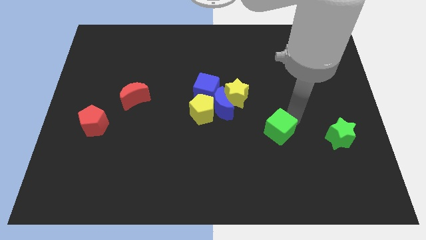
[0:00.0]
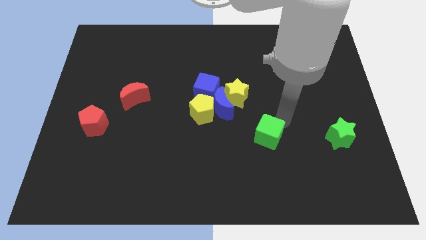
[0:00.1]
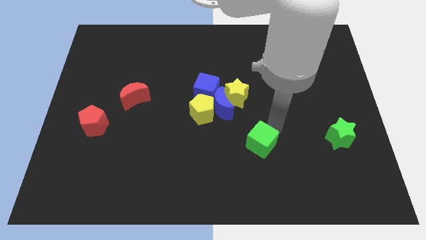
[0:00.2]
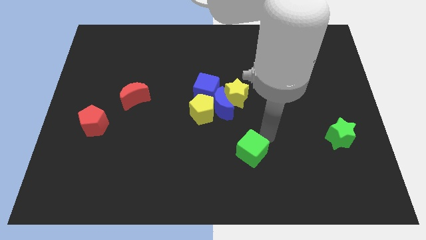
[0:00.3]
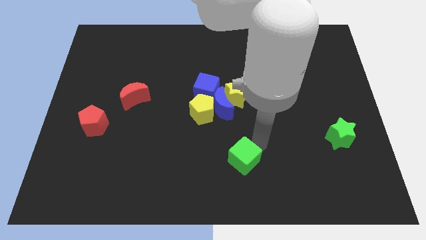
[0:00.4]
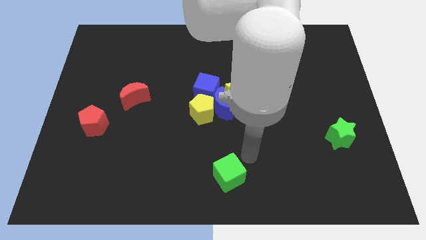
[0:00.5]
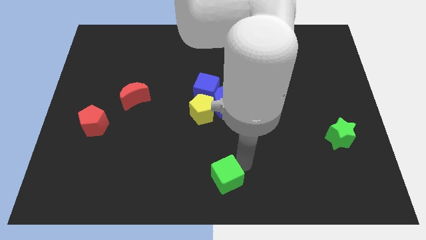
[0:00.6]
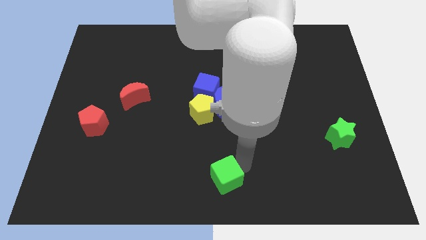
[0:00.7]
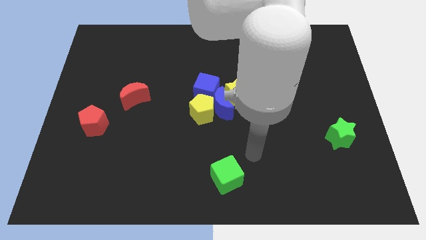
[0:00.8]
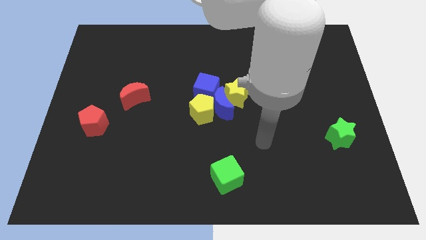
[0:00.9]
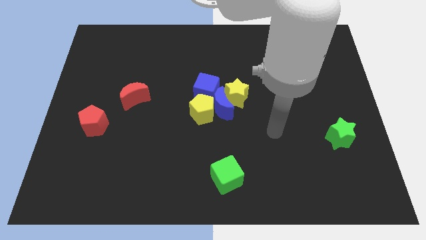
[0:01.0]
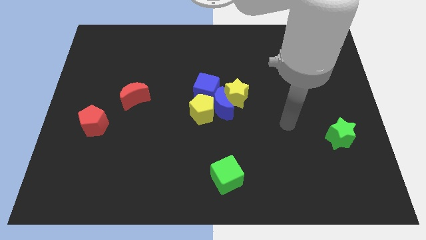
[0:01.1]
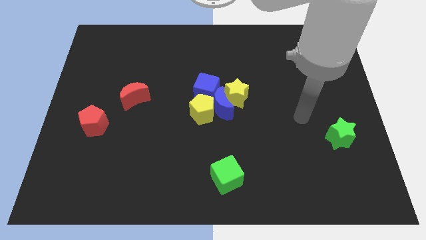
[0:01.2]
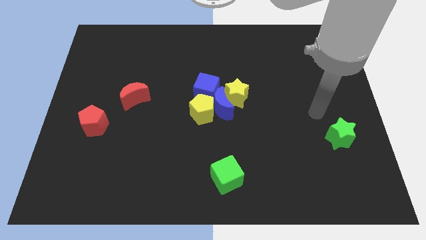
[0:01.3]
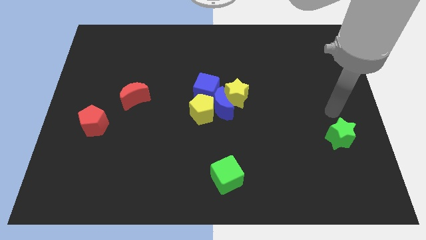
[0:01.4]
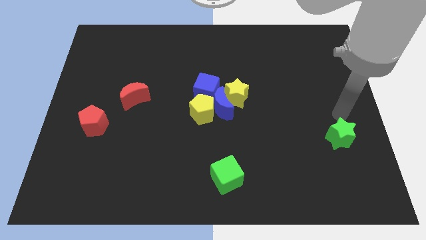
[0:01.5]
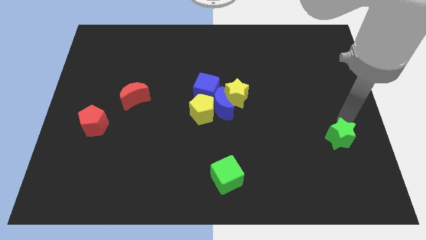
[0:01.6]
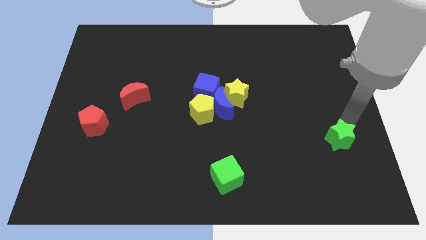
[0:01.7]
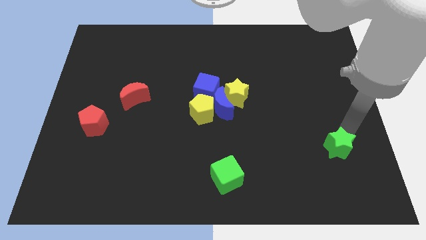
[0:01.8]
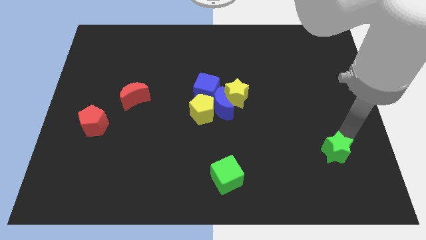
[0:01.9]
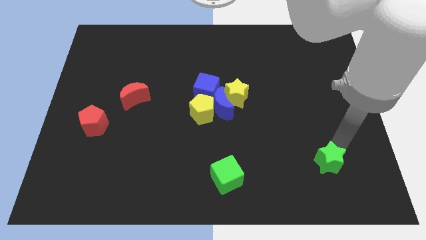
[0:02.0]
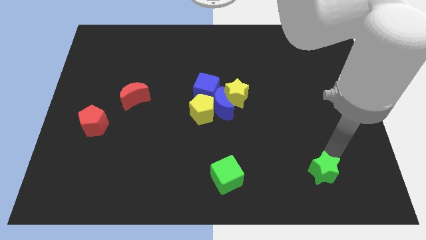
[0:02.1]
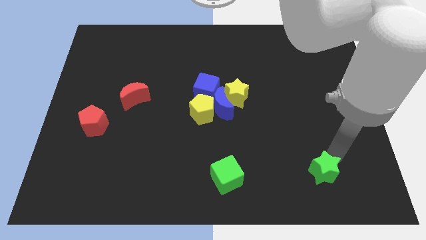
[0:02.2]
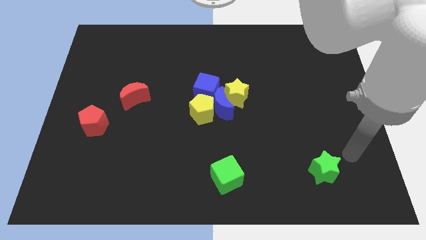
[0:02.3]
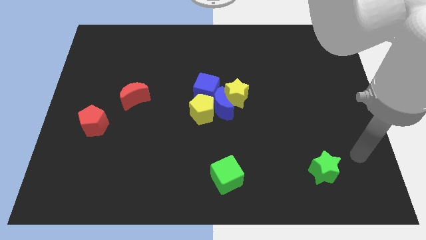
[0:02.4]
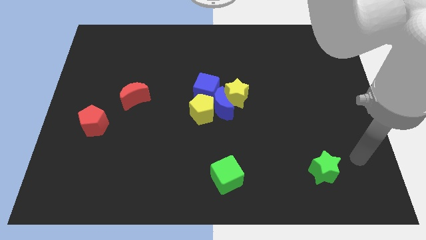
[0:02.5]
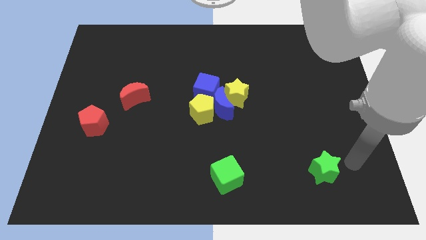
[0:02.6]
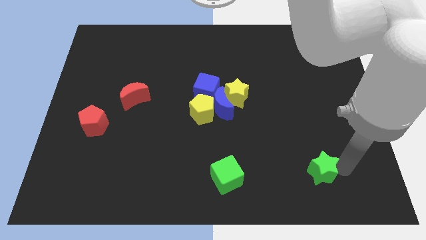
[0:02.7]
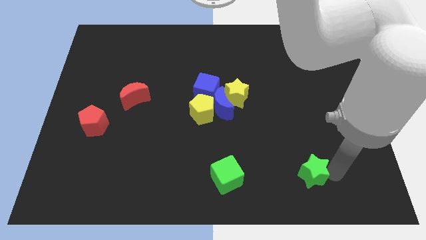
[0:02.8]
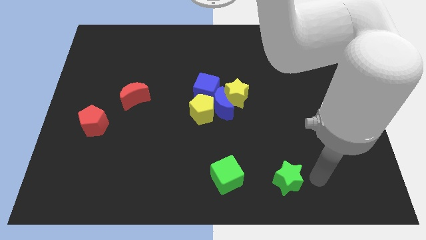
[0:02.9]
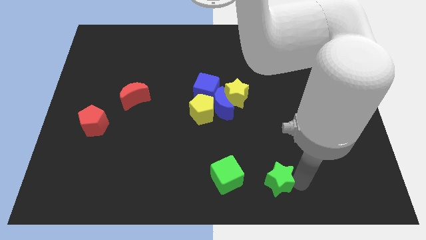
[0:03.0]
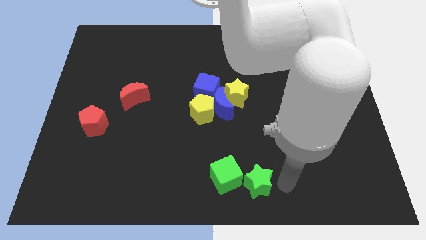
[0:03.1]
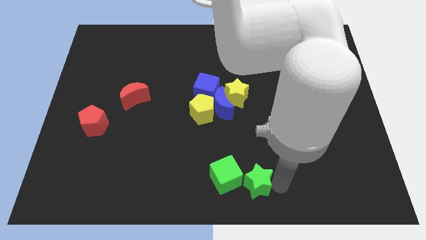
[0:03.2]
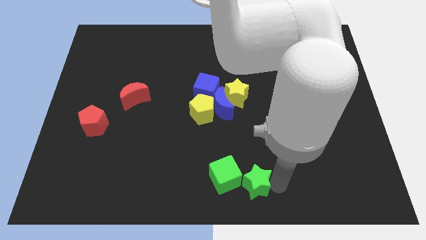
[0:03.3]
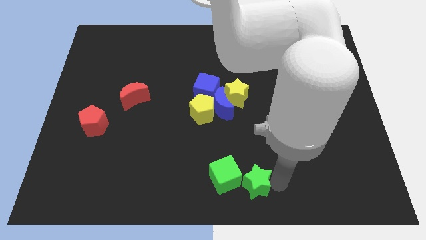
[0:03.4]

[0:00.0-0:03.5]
place the green blocks together at the bottom side of the board

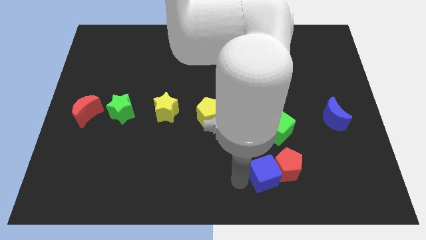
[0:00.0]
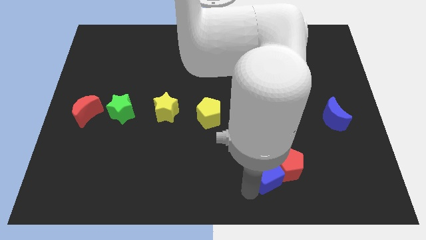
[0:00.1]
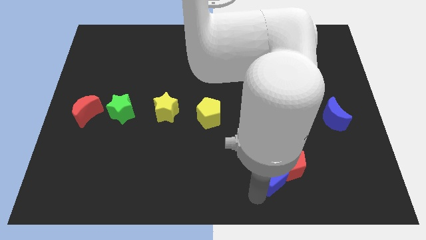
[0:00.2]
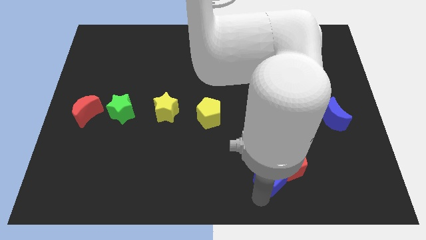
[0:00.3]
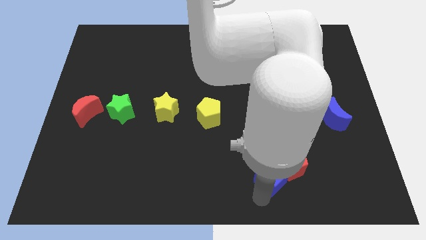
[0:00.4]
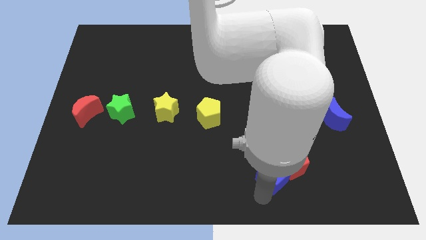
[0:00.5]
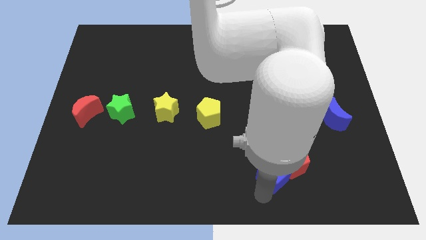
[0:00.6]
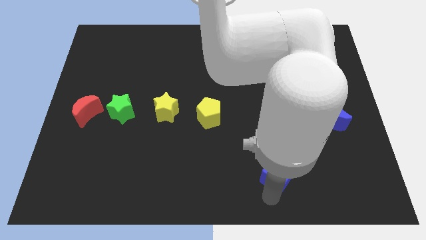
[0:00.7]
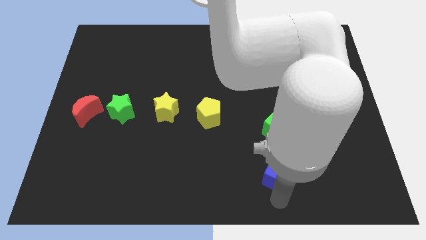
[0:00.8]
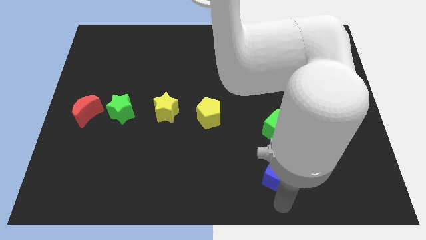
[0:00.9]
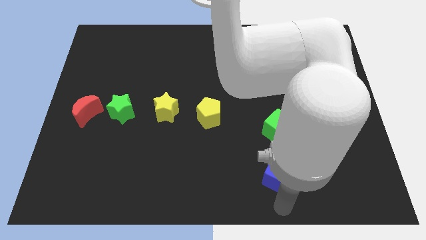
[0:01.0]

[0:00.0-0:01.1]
move the red pentagon towards the bottom of the green cube with the help of the blue cube

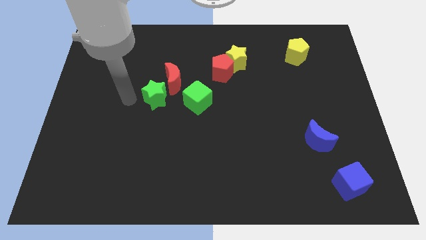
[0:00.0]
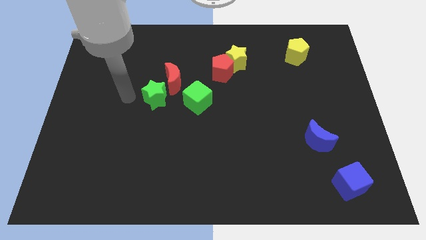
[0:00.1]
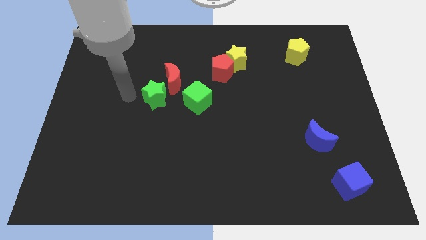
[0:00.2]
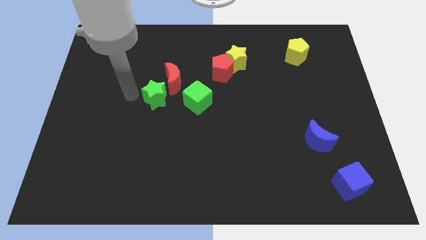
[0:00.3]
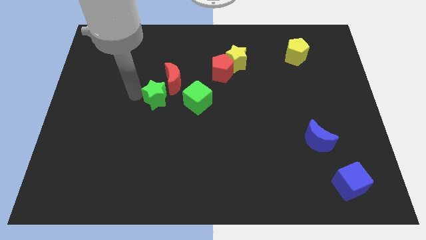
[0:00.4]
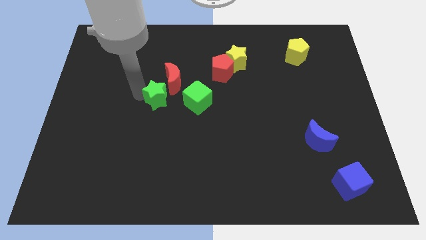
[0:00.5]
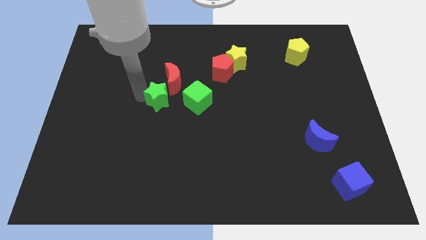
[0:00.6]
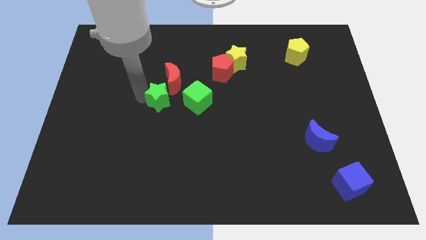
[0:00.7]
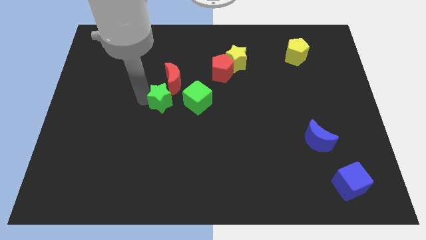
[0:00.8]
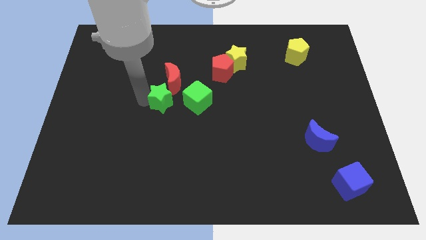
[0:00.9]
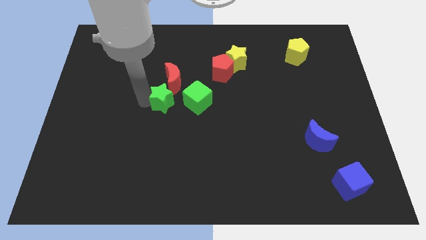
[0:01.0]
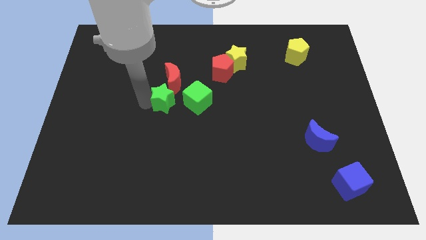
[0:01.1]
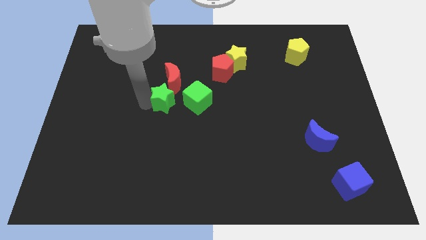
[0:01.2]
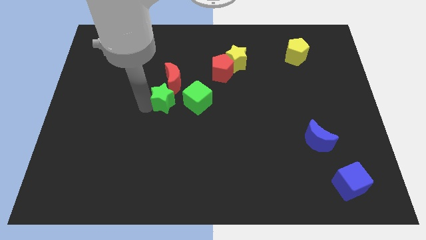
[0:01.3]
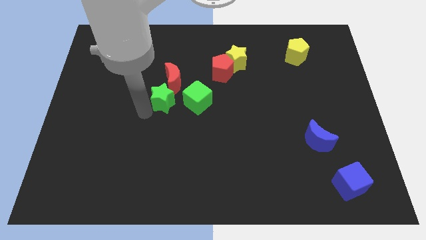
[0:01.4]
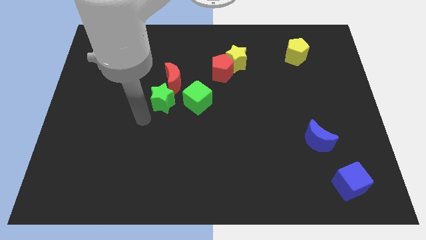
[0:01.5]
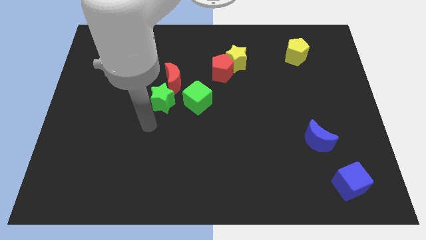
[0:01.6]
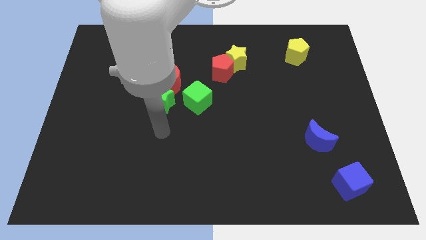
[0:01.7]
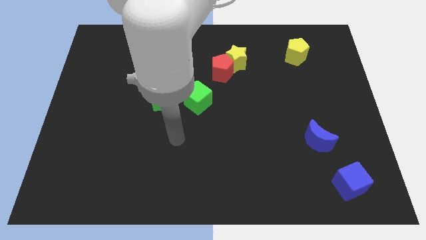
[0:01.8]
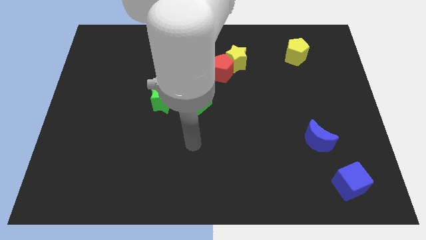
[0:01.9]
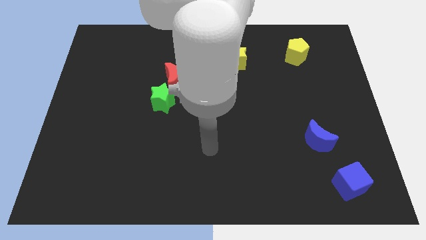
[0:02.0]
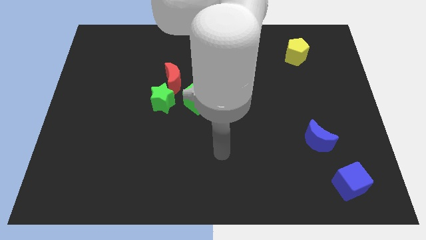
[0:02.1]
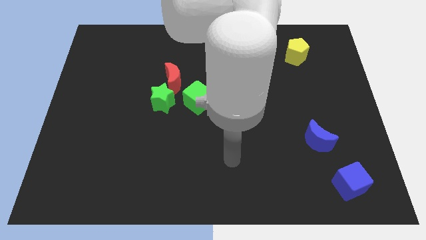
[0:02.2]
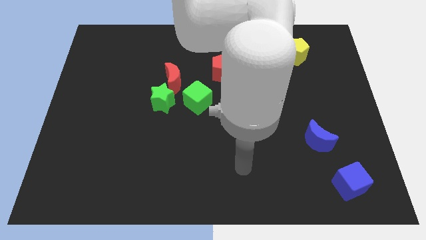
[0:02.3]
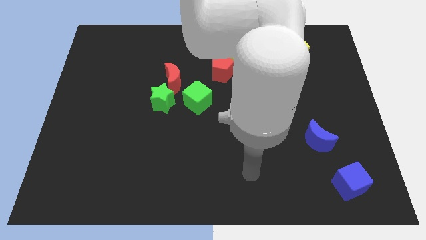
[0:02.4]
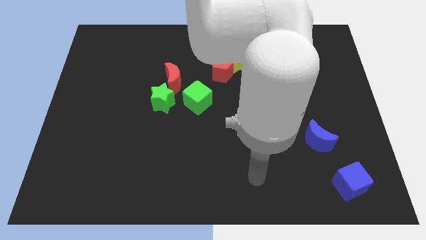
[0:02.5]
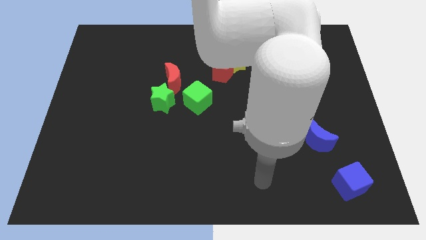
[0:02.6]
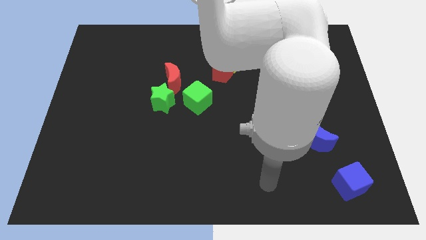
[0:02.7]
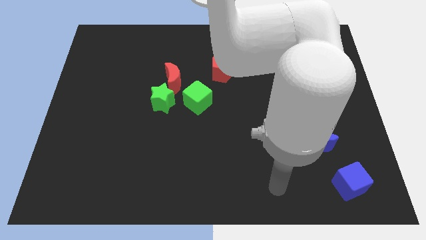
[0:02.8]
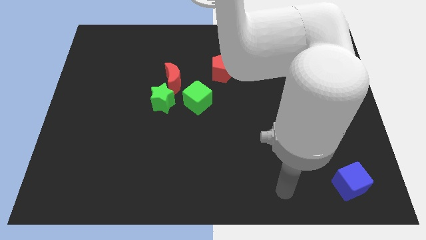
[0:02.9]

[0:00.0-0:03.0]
move your arm away from the green star towards the bottom right

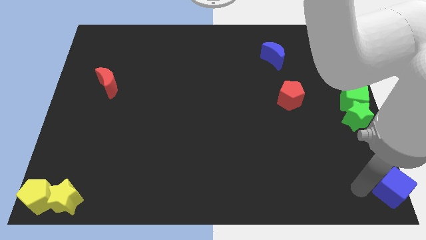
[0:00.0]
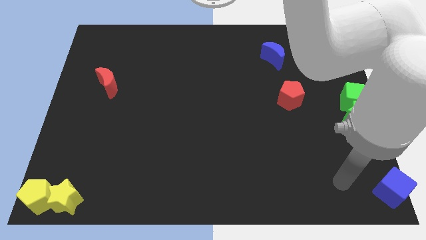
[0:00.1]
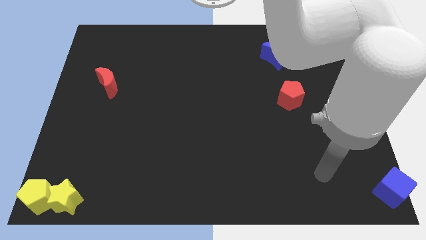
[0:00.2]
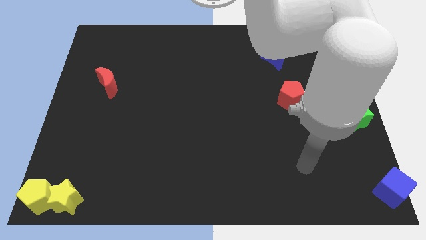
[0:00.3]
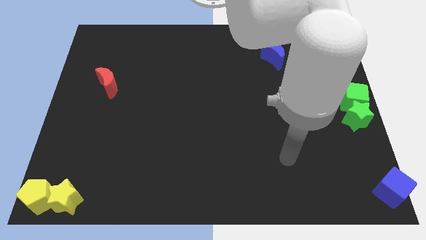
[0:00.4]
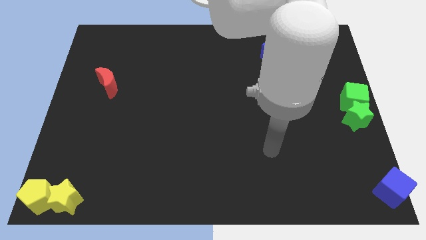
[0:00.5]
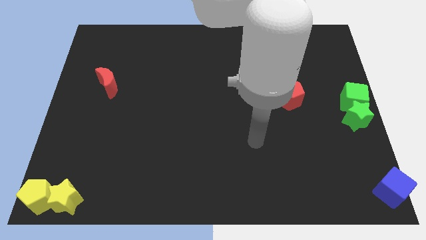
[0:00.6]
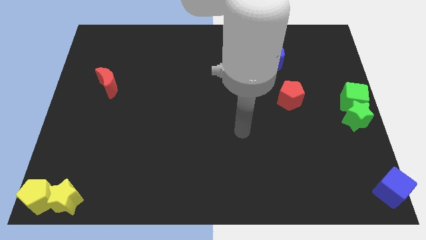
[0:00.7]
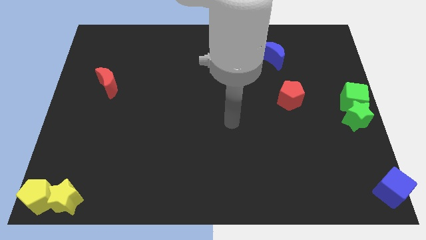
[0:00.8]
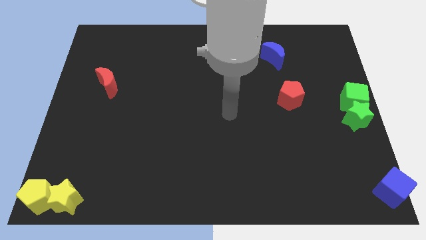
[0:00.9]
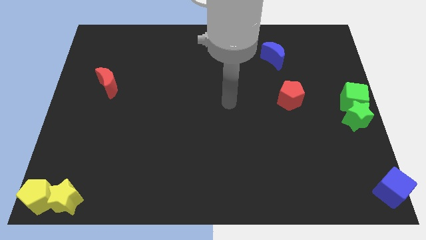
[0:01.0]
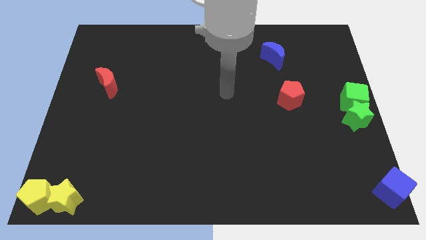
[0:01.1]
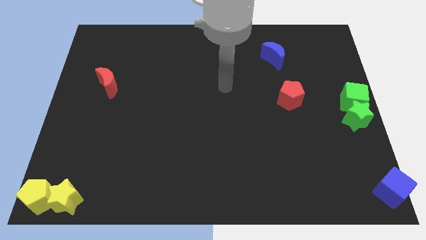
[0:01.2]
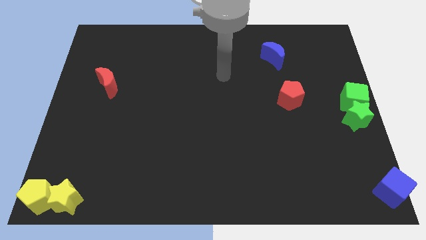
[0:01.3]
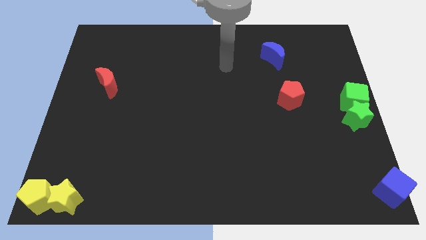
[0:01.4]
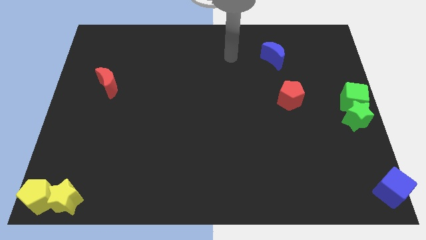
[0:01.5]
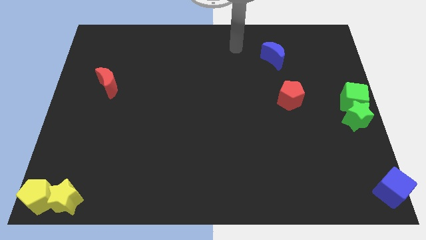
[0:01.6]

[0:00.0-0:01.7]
move your arm away from blue cube
